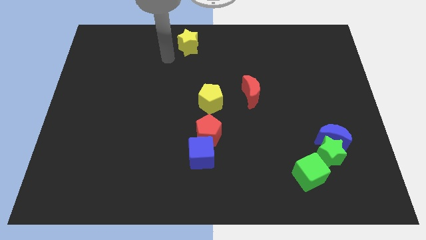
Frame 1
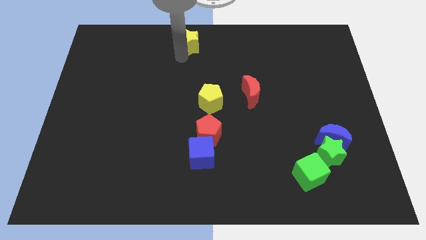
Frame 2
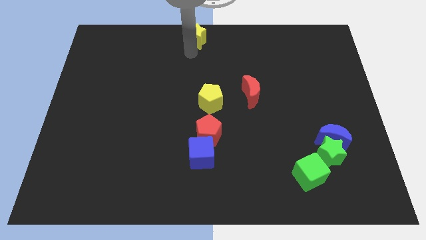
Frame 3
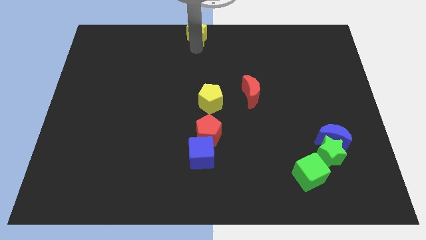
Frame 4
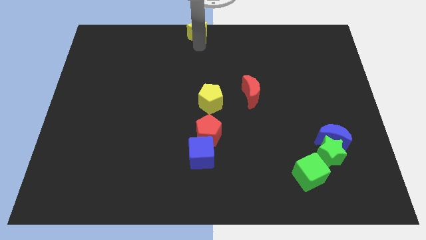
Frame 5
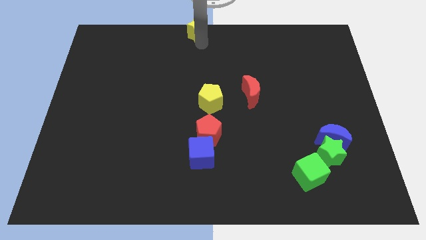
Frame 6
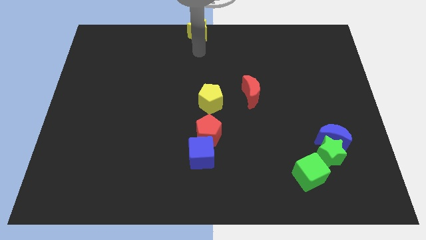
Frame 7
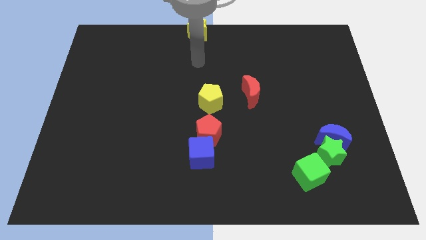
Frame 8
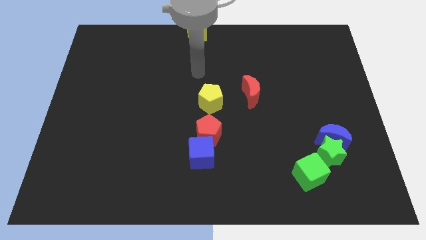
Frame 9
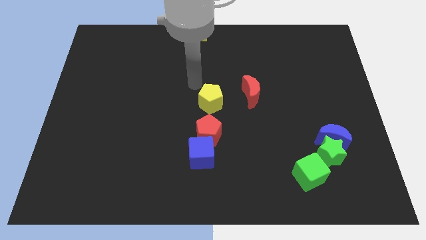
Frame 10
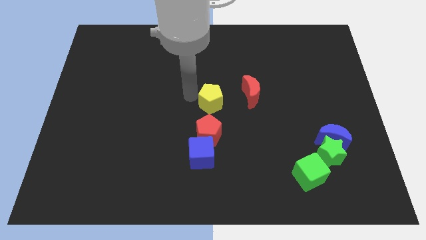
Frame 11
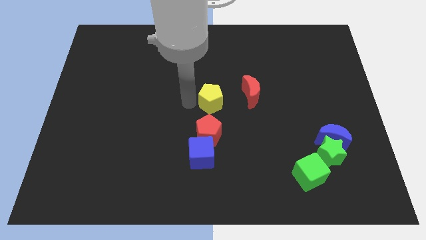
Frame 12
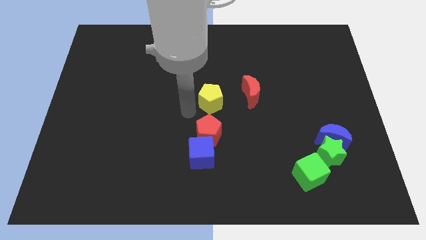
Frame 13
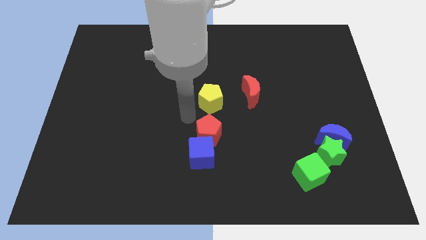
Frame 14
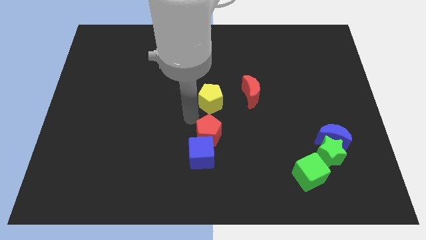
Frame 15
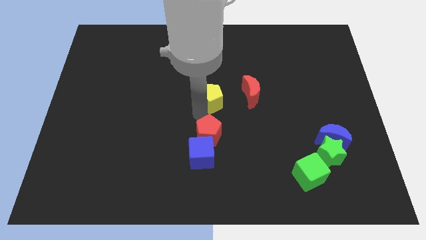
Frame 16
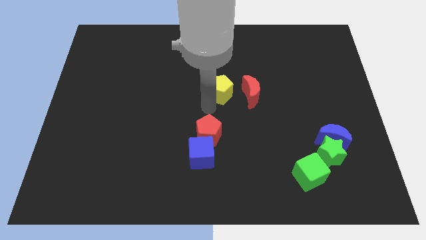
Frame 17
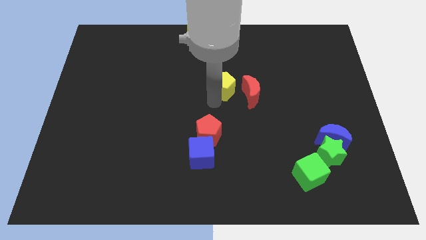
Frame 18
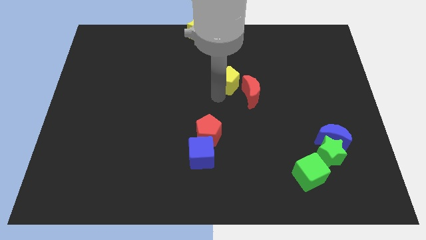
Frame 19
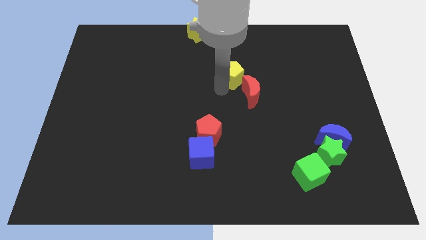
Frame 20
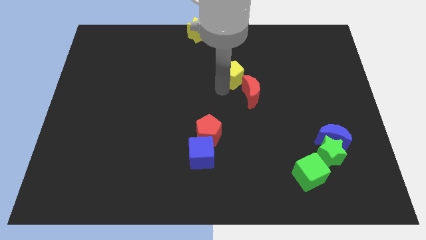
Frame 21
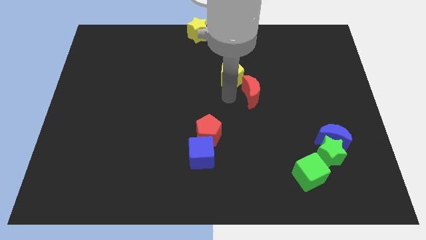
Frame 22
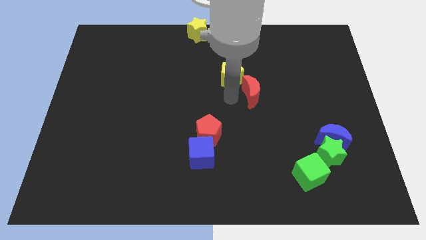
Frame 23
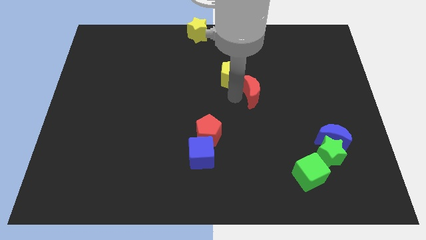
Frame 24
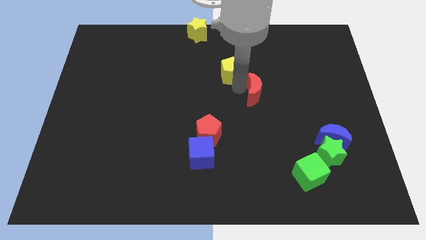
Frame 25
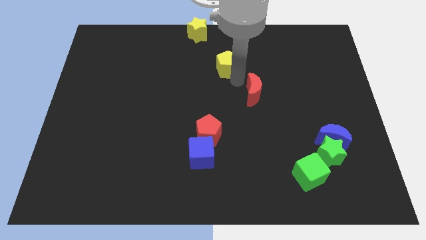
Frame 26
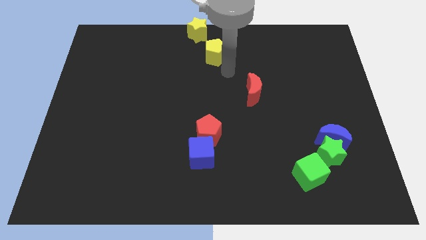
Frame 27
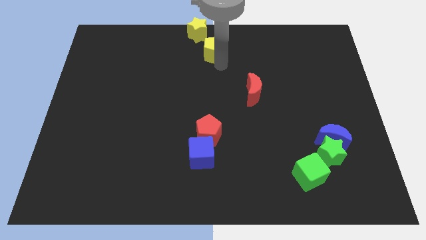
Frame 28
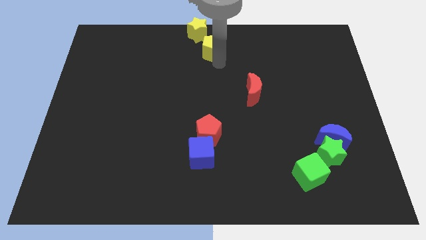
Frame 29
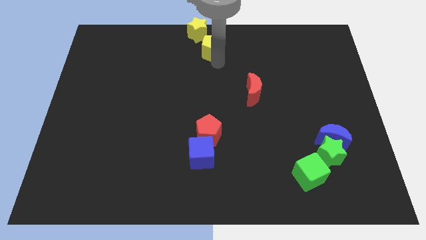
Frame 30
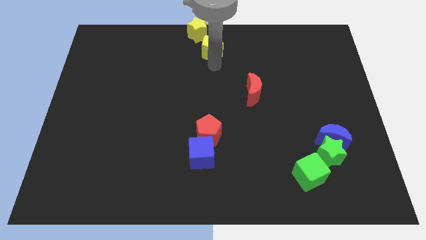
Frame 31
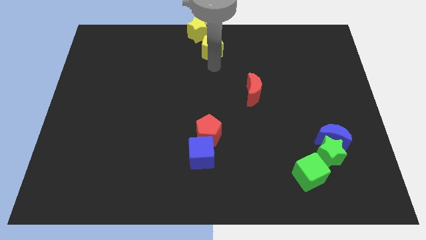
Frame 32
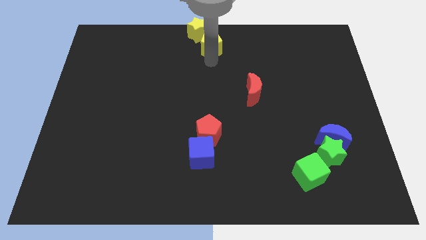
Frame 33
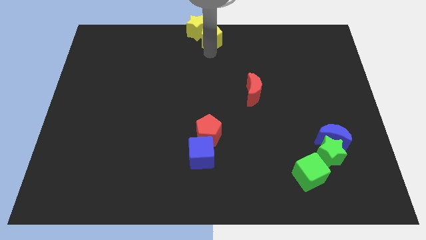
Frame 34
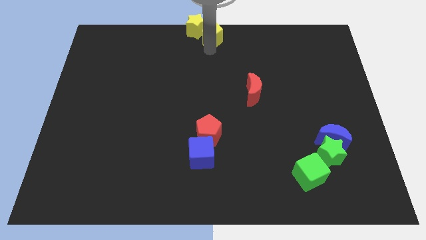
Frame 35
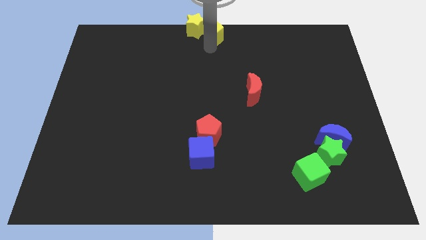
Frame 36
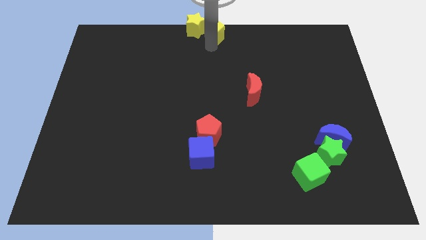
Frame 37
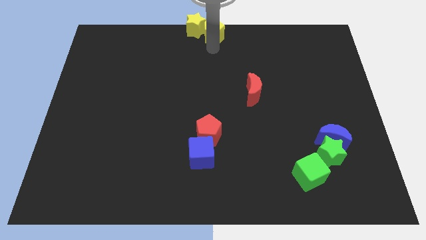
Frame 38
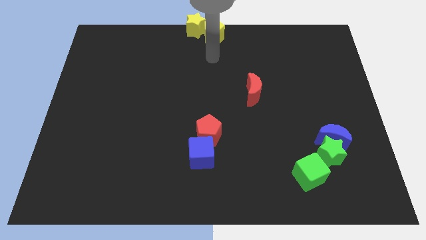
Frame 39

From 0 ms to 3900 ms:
move yellow pentagon into yellow star

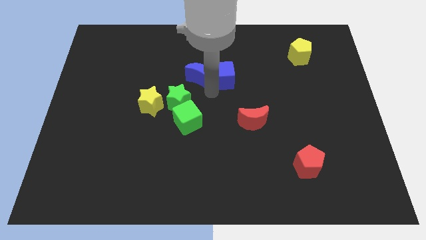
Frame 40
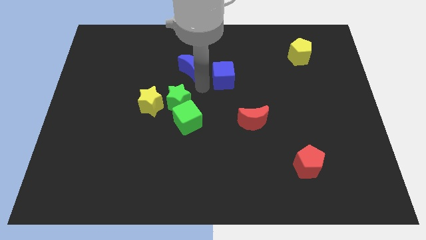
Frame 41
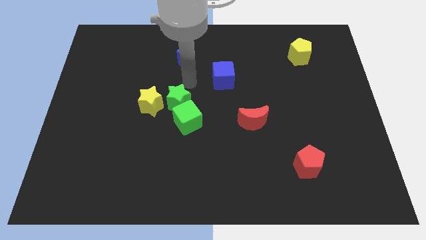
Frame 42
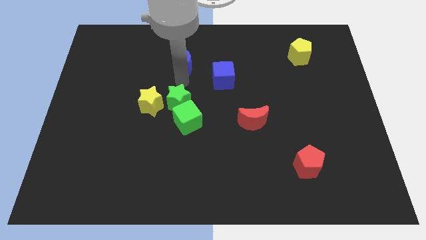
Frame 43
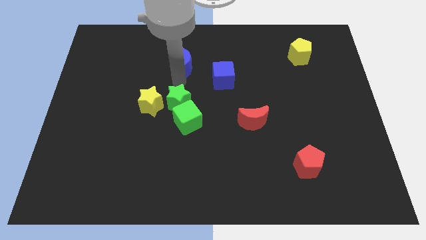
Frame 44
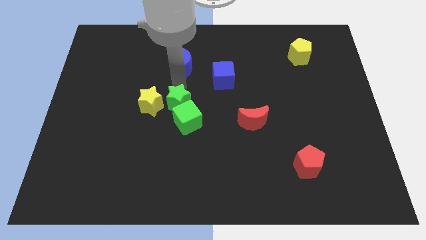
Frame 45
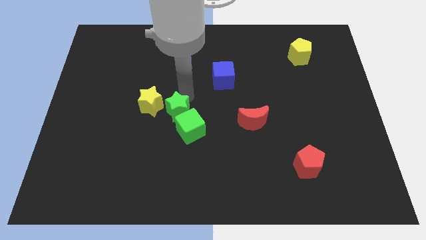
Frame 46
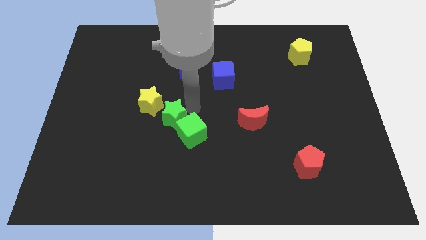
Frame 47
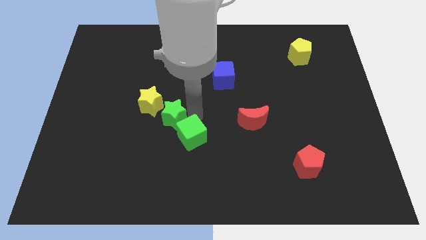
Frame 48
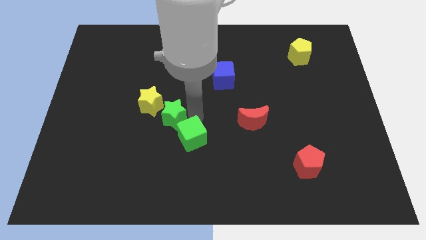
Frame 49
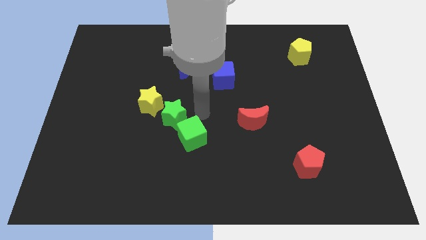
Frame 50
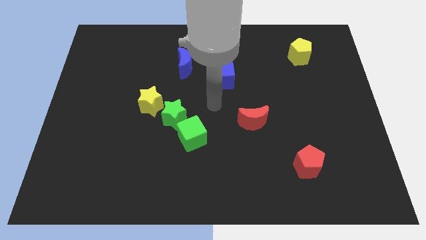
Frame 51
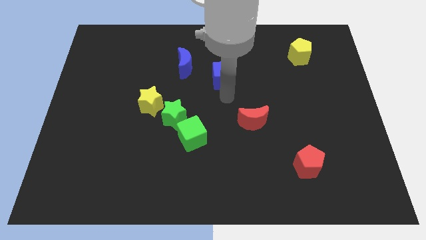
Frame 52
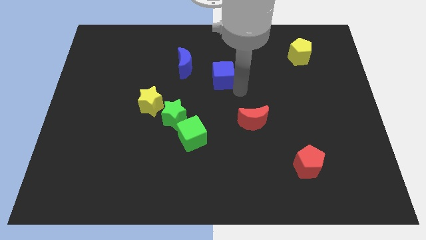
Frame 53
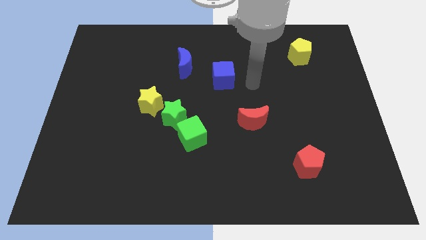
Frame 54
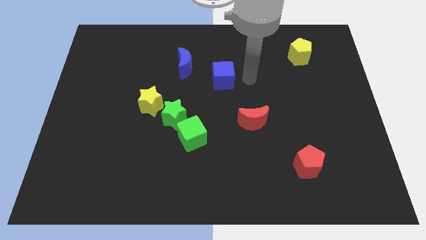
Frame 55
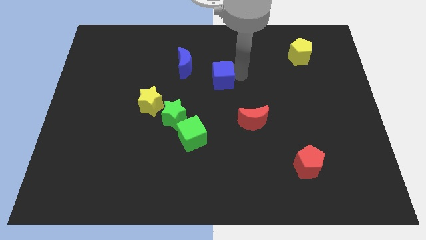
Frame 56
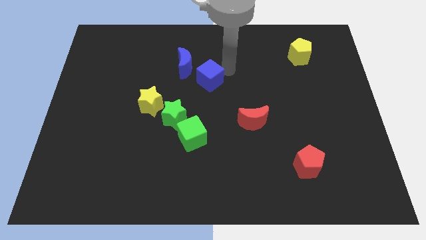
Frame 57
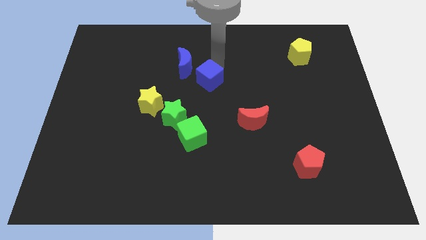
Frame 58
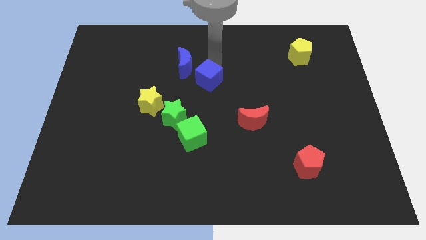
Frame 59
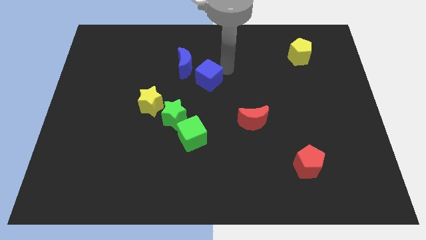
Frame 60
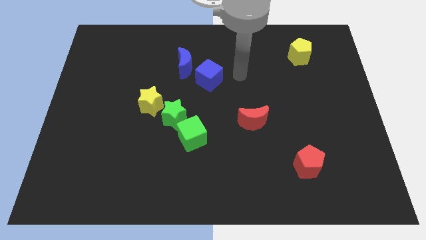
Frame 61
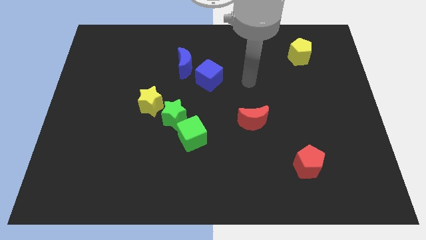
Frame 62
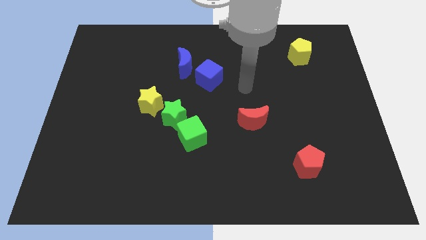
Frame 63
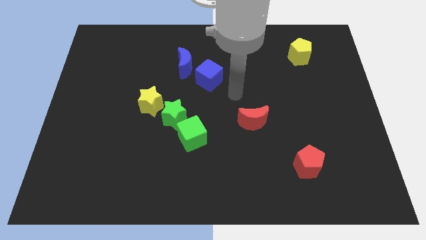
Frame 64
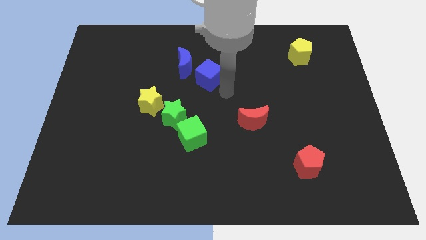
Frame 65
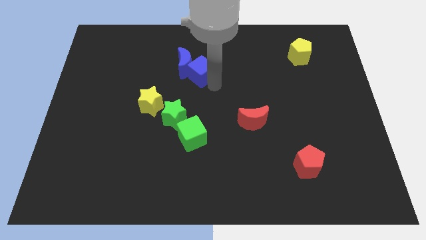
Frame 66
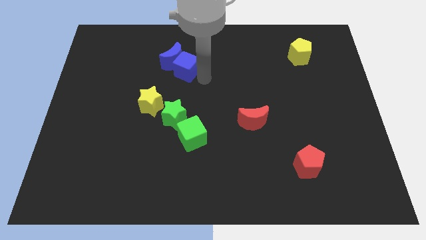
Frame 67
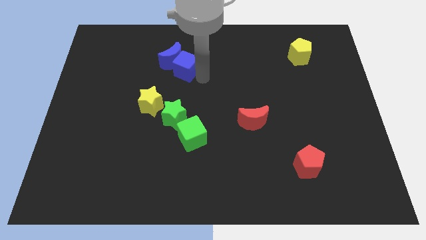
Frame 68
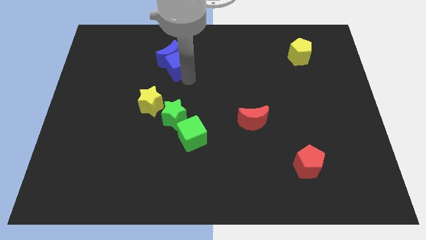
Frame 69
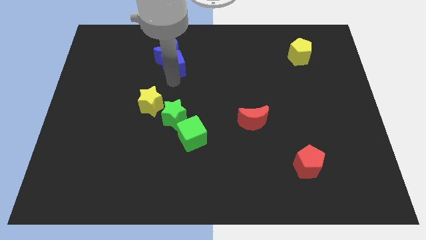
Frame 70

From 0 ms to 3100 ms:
put the blue blocks slightly towards up

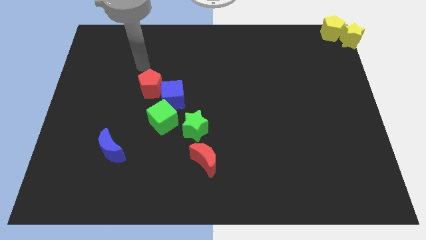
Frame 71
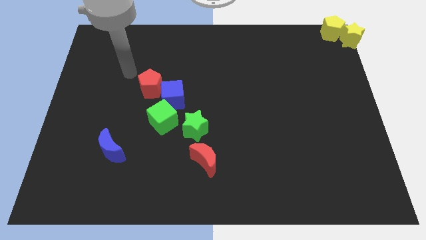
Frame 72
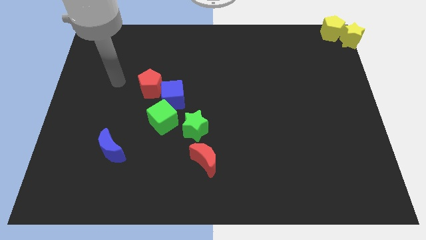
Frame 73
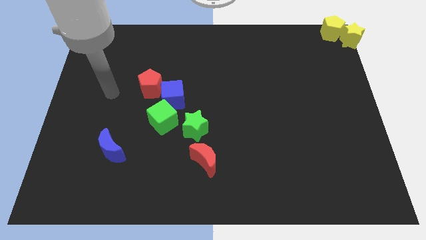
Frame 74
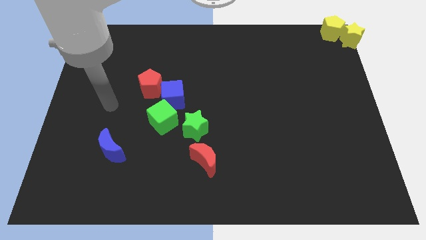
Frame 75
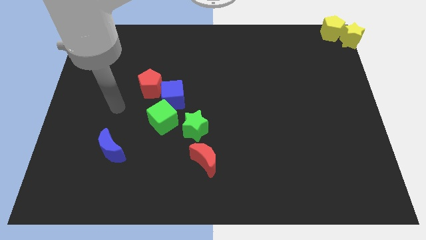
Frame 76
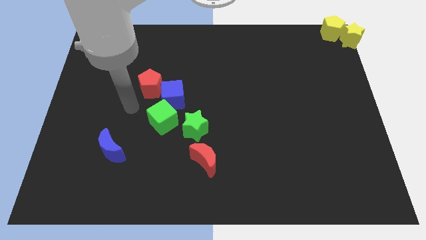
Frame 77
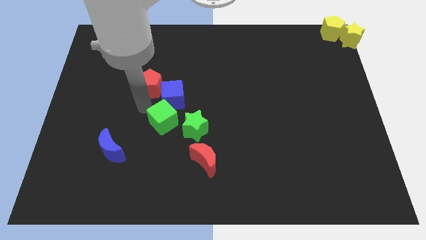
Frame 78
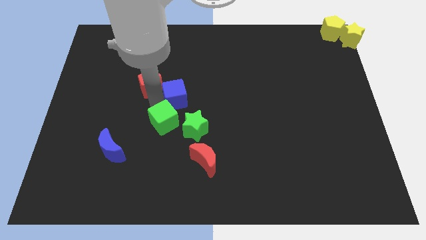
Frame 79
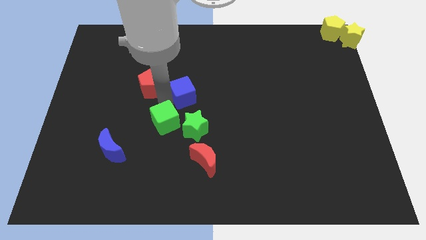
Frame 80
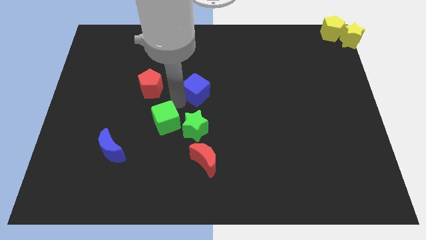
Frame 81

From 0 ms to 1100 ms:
push the blue cube to the top of the green star

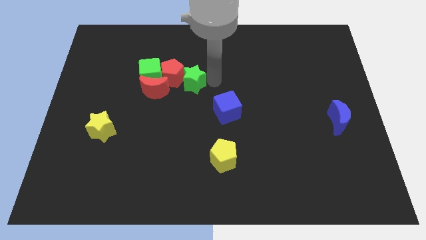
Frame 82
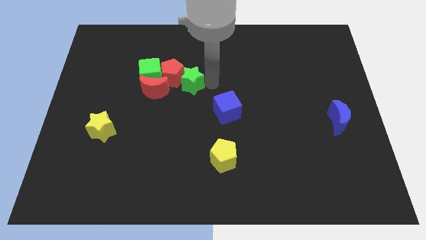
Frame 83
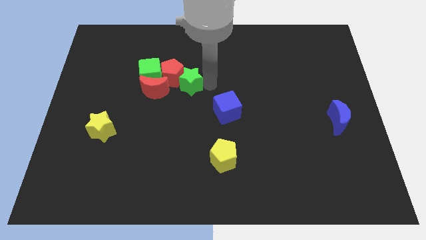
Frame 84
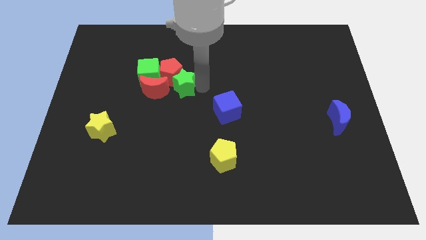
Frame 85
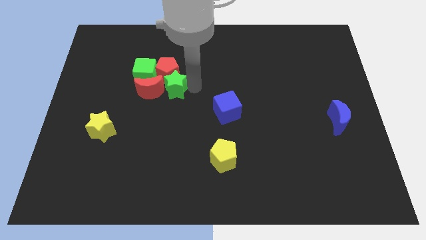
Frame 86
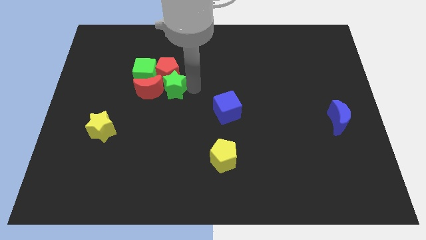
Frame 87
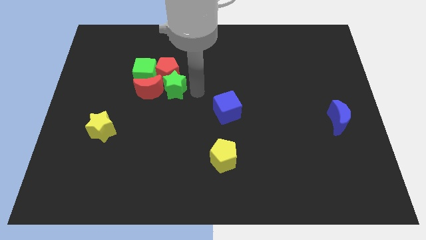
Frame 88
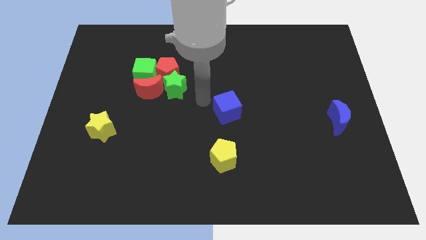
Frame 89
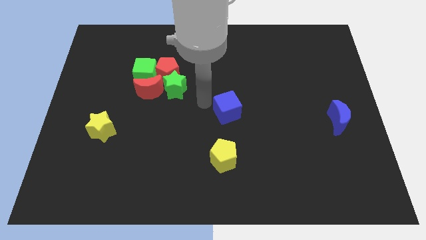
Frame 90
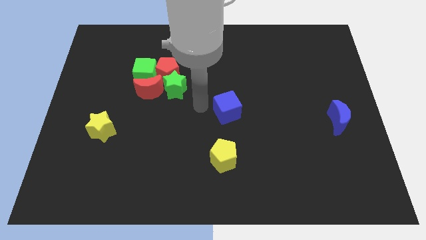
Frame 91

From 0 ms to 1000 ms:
place the green star below the red pentagon
